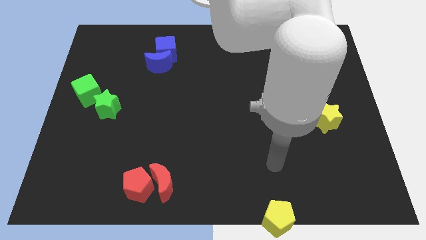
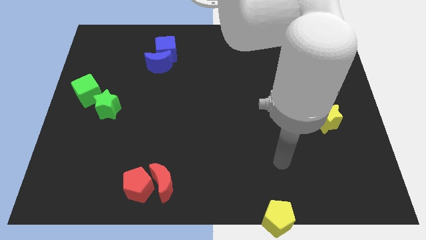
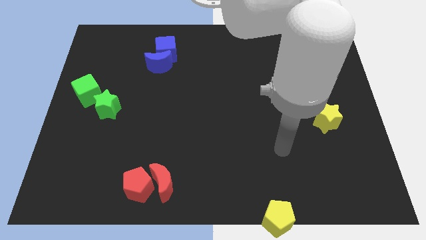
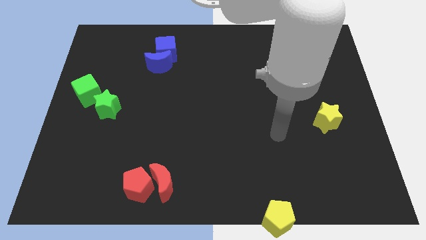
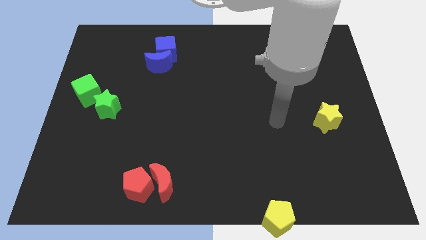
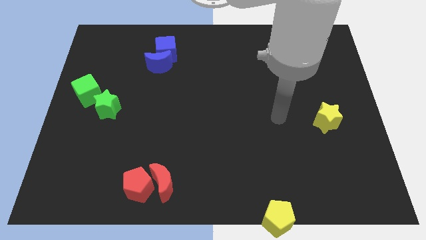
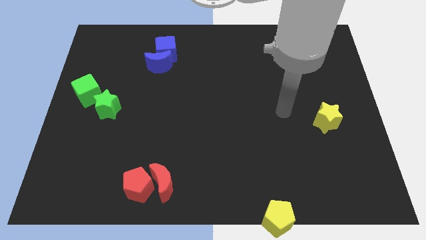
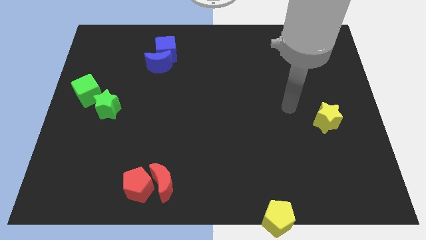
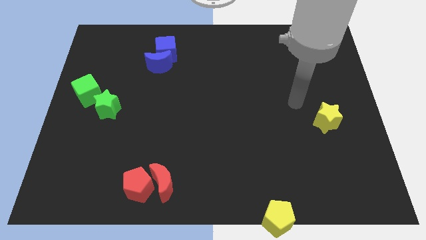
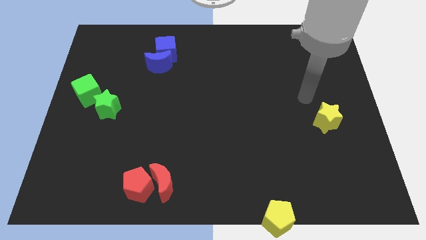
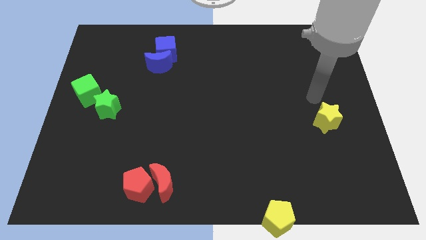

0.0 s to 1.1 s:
move your arm to the top of the yellow star

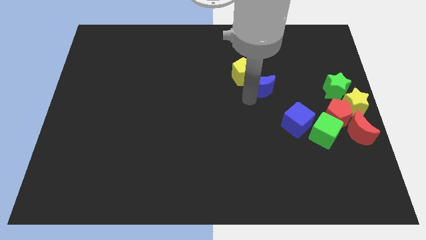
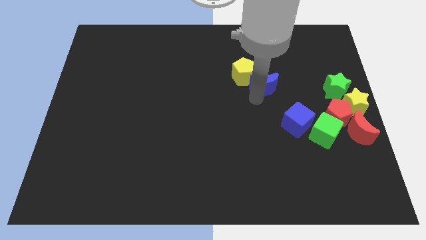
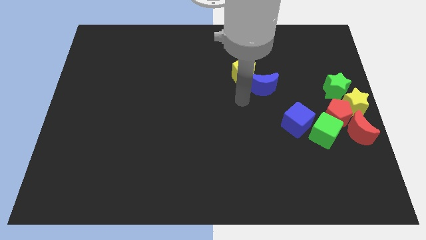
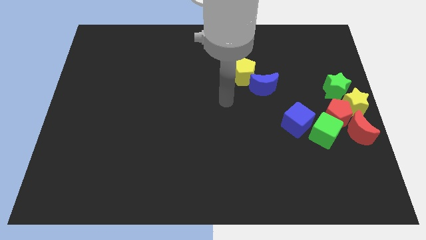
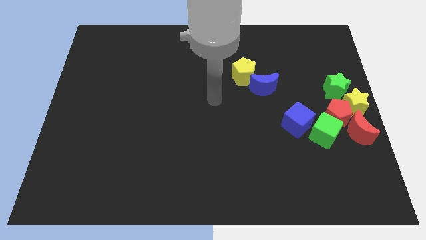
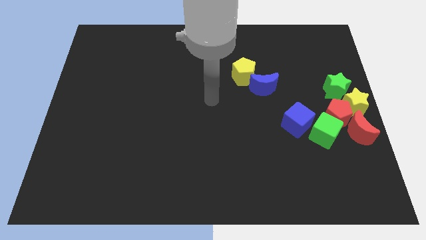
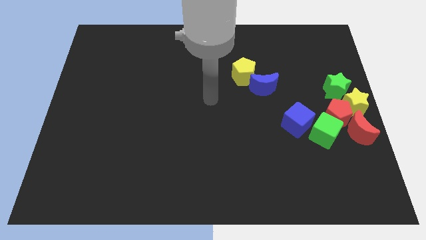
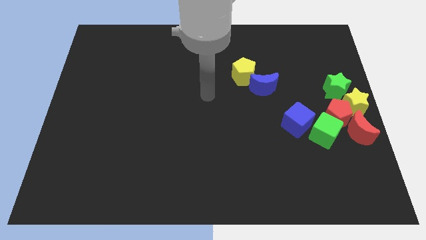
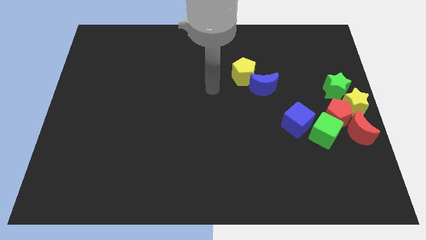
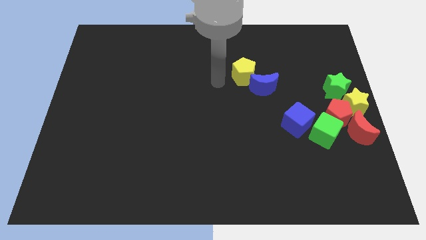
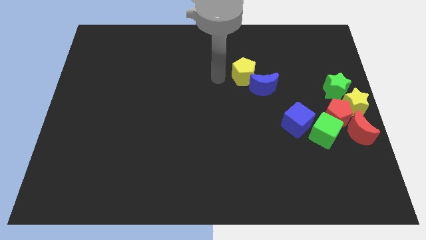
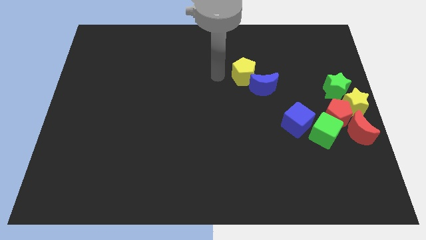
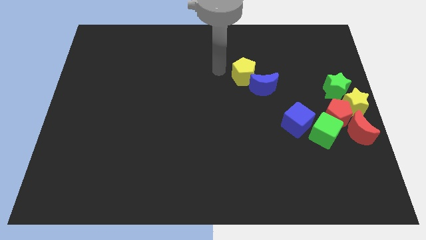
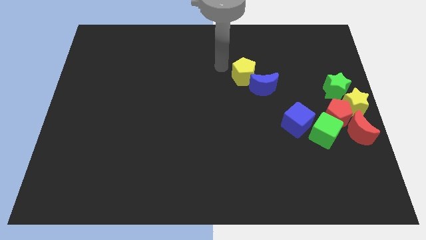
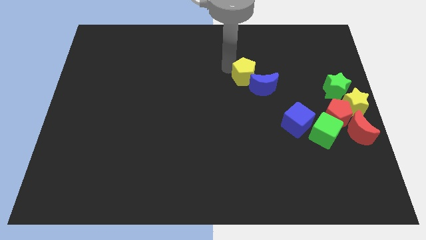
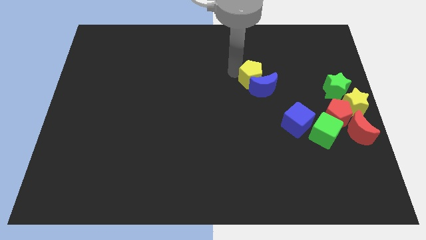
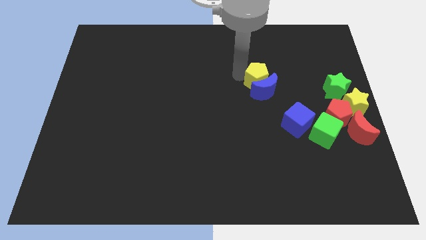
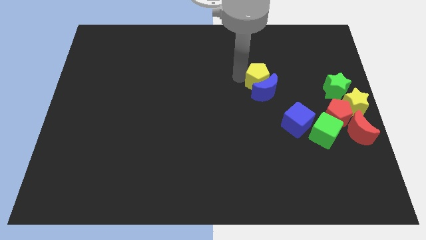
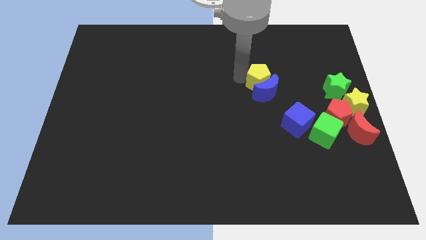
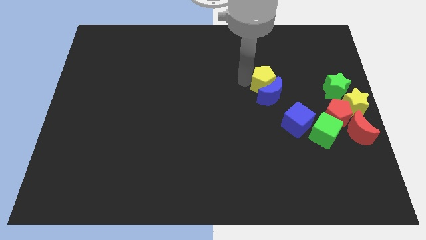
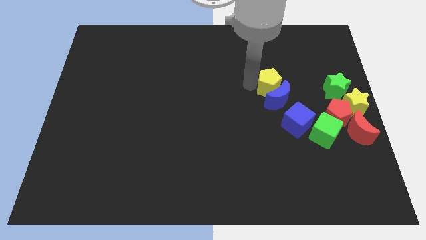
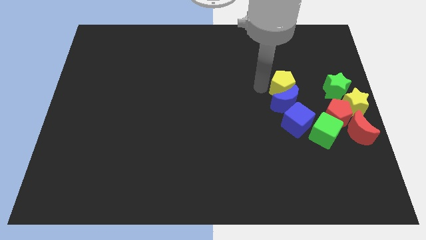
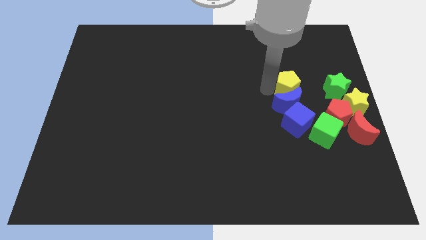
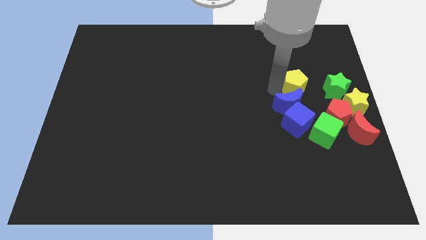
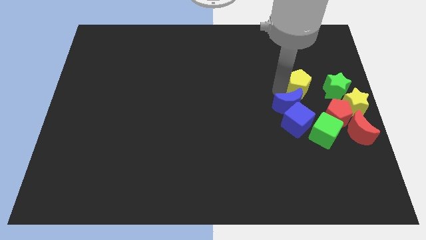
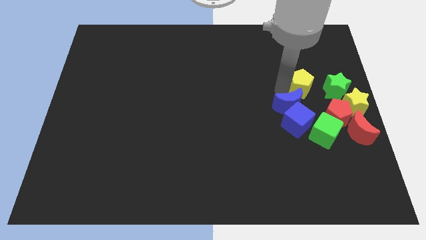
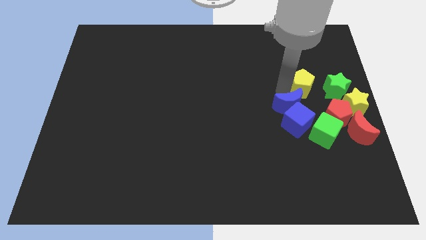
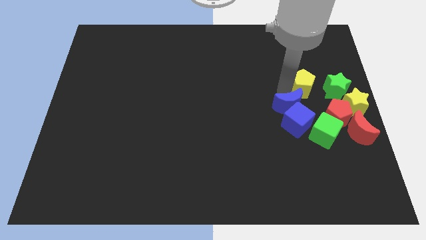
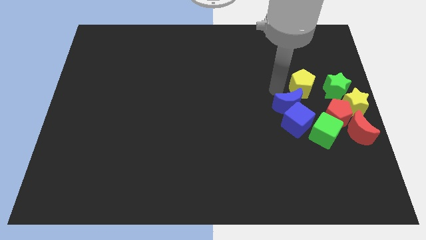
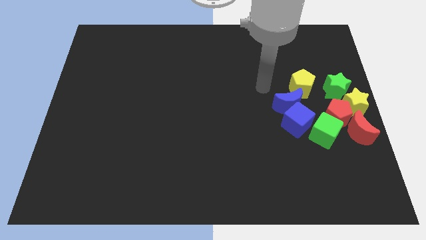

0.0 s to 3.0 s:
push blue moon and yellow pentagon close to the blue cube

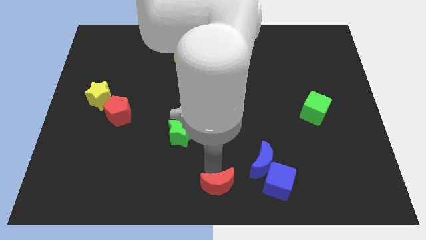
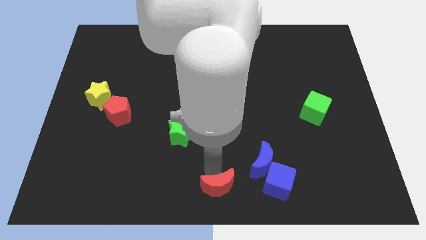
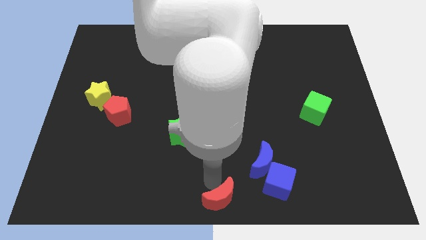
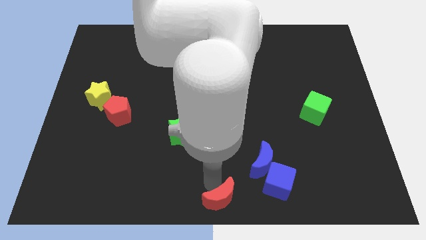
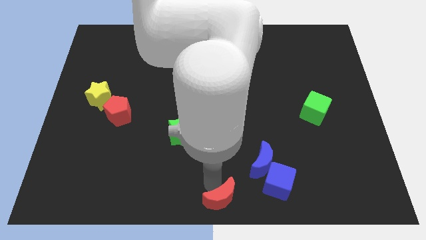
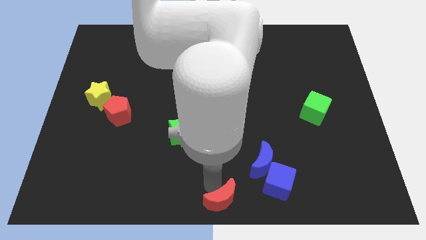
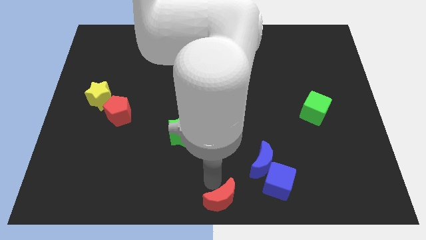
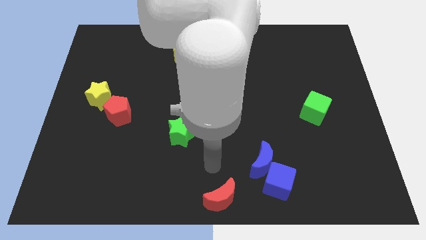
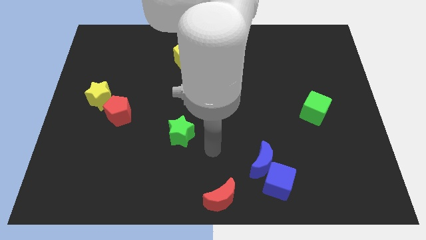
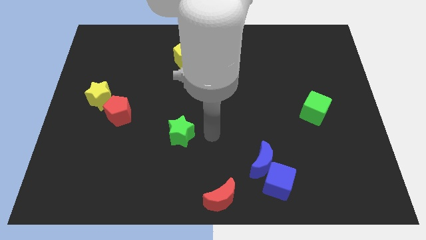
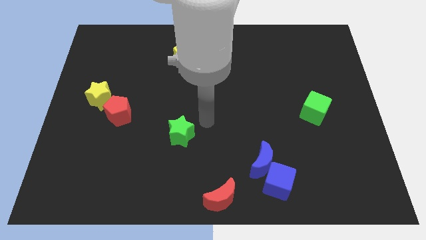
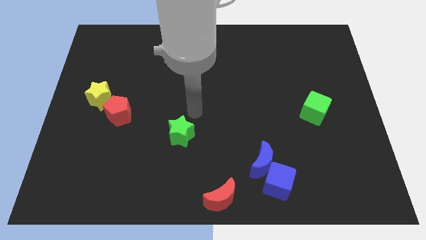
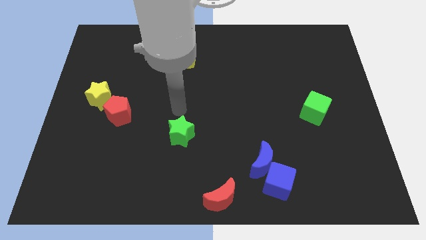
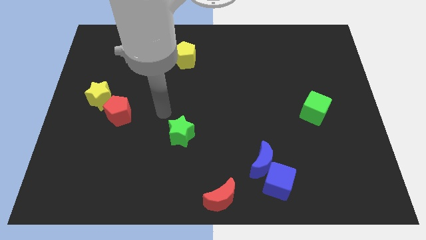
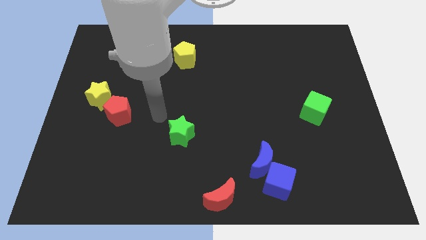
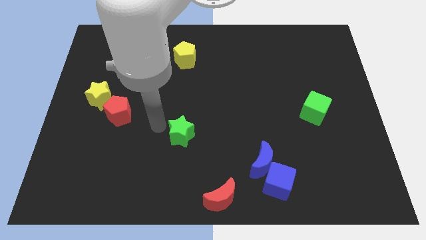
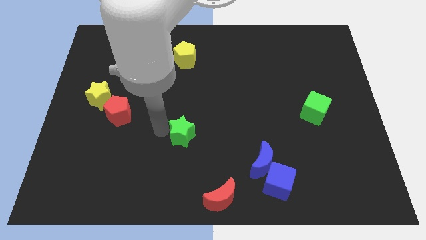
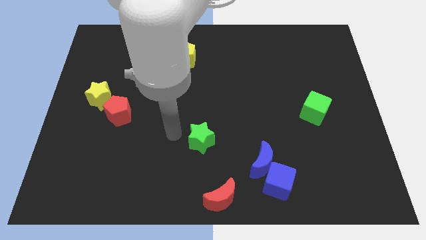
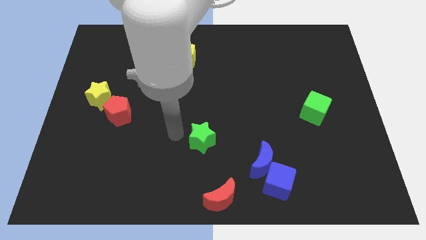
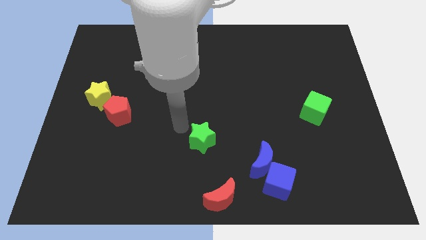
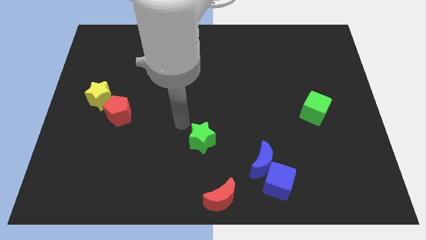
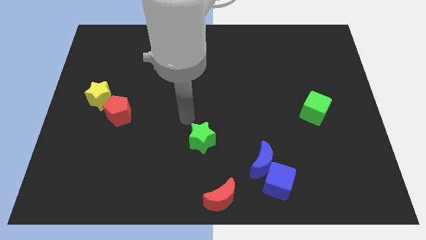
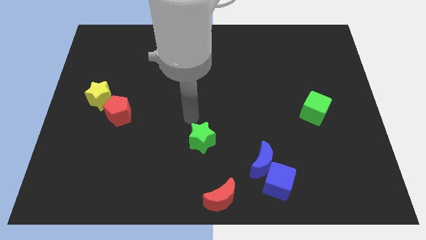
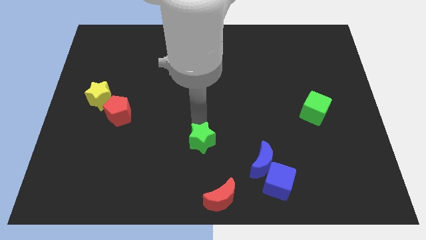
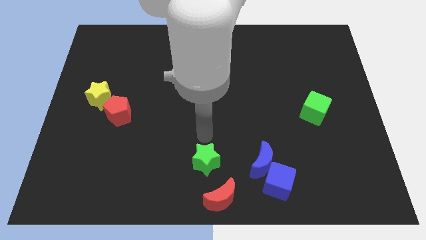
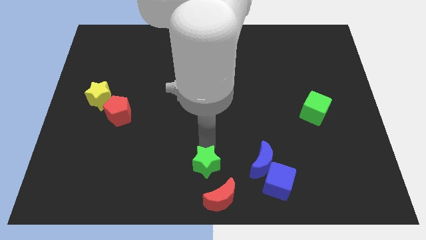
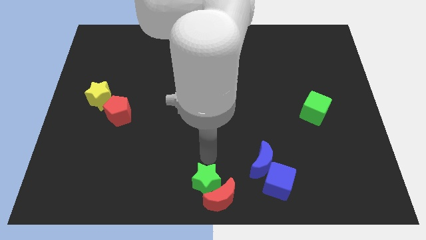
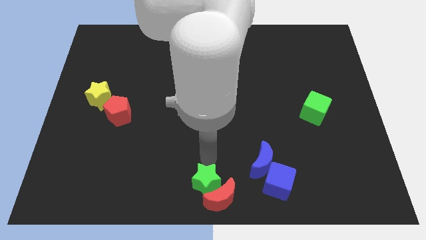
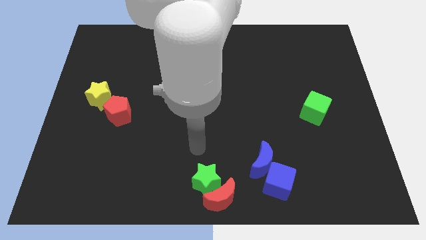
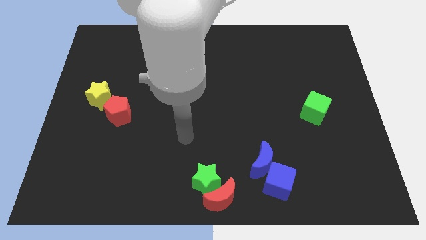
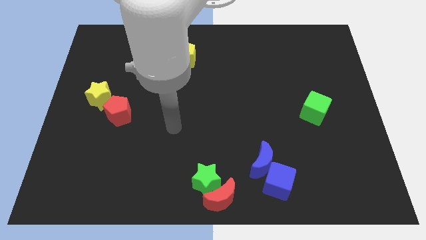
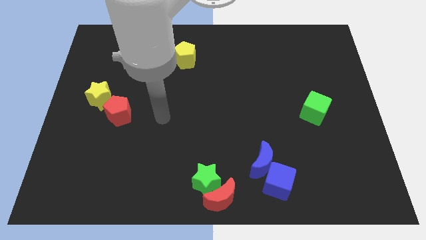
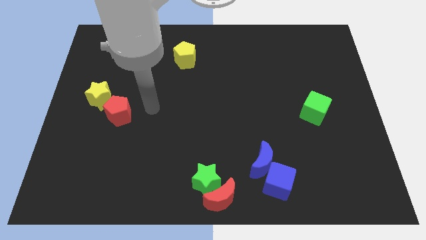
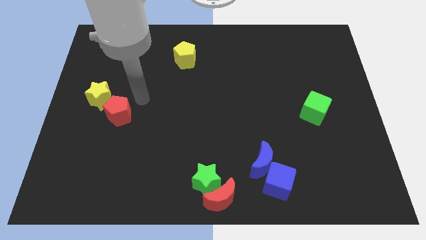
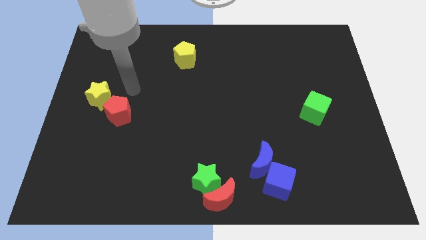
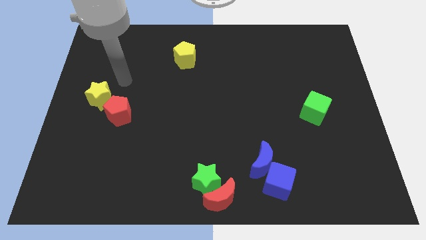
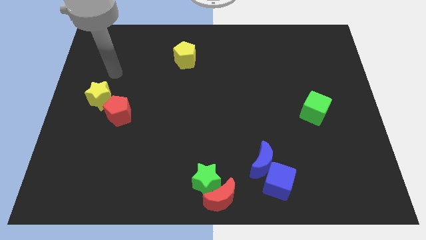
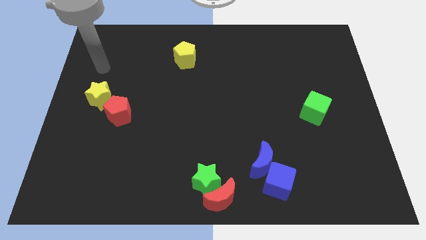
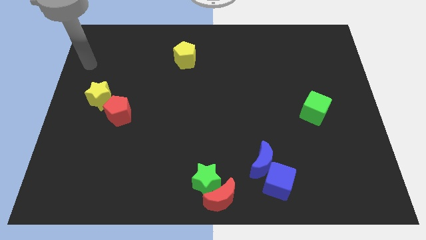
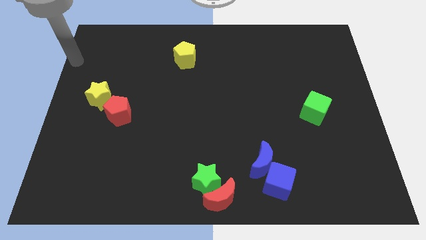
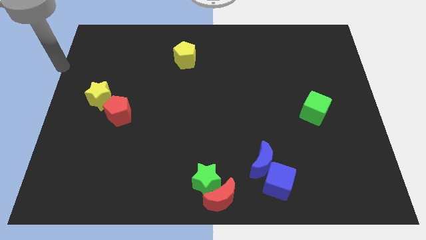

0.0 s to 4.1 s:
slightly move the red crescent and the green star to the bottom center of the board

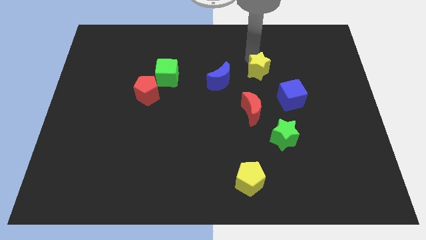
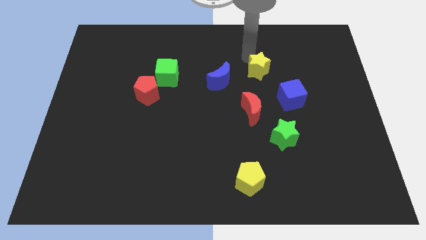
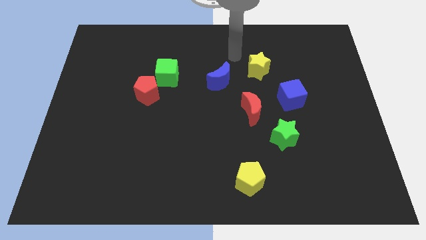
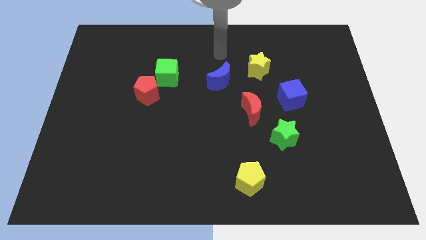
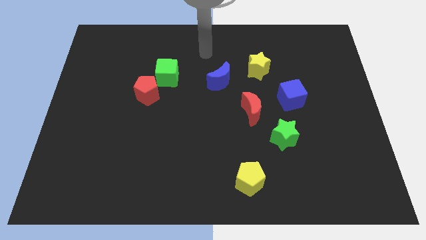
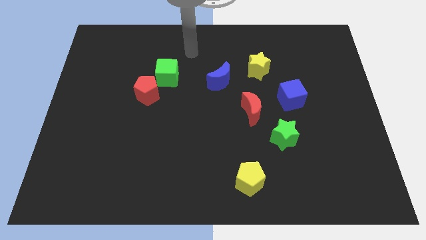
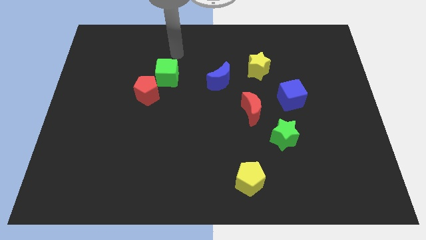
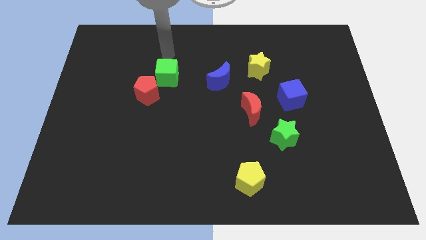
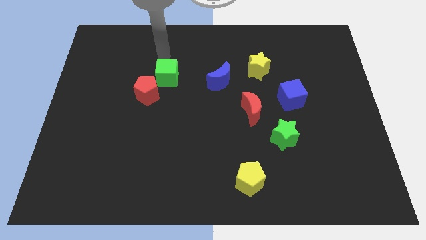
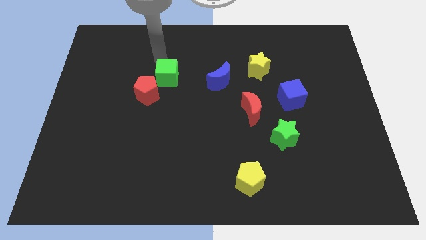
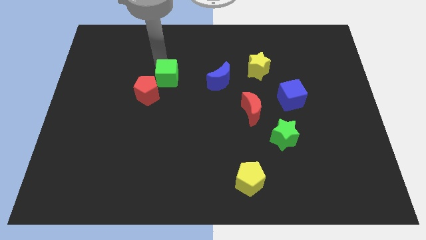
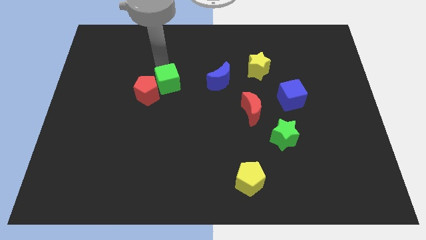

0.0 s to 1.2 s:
place your arm to the top of green cube
